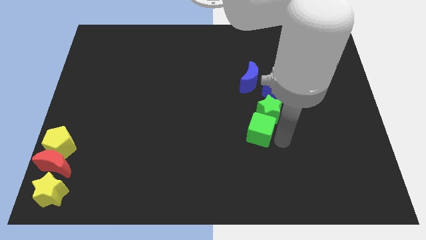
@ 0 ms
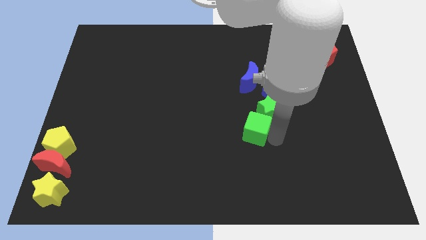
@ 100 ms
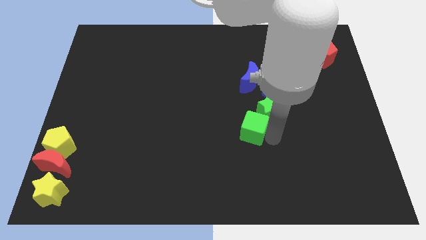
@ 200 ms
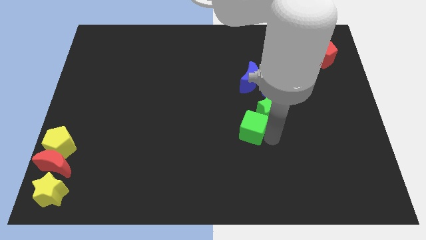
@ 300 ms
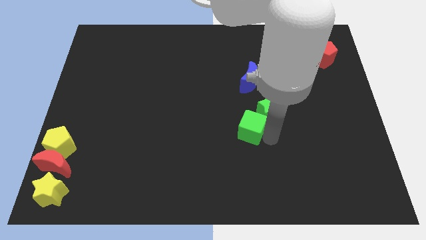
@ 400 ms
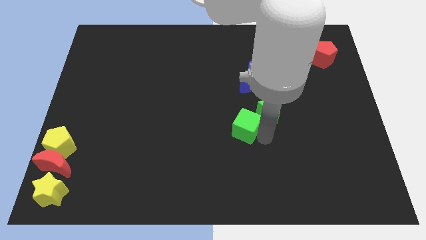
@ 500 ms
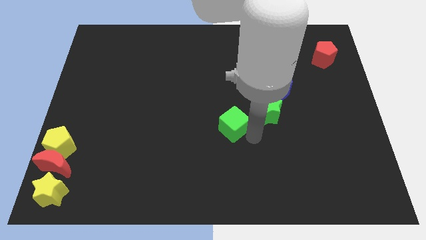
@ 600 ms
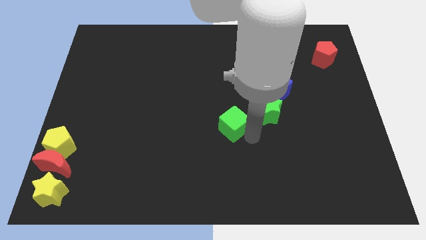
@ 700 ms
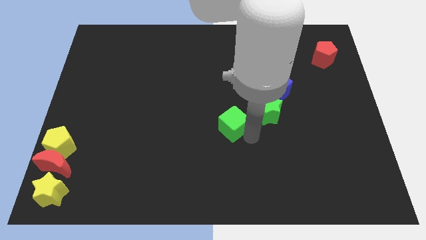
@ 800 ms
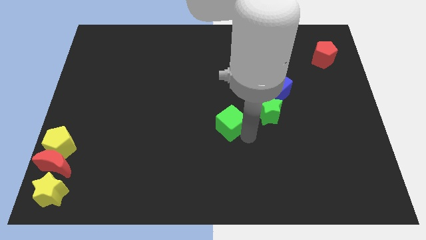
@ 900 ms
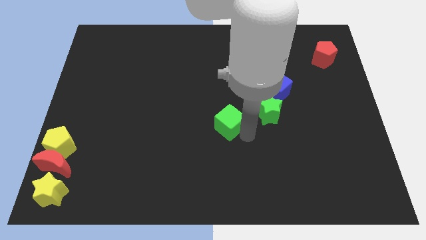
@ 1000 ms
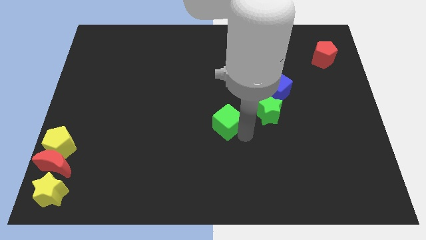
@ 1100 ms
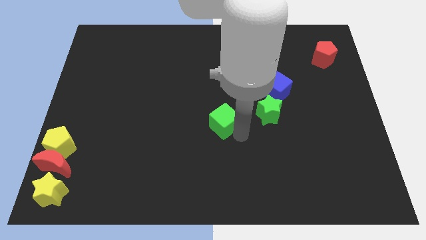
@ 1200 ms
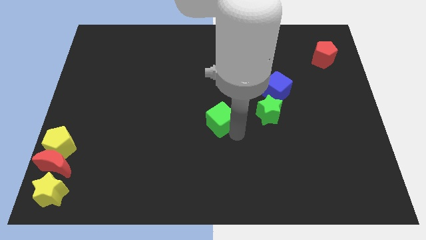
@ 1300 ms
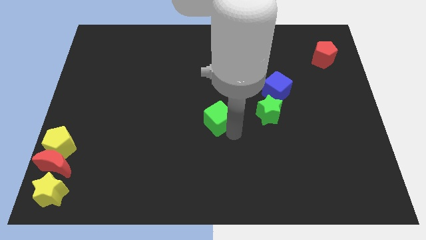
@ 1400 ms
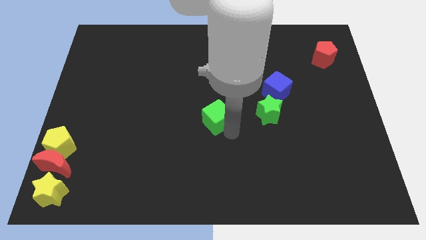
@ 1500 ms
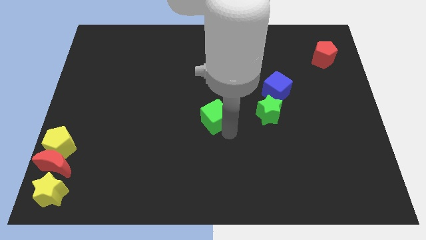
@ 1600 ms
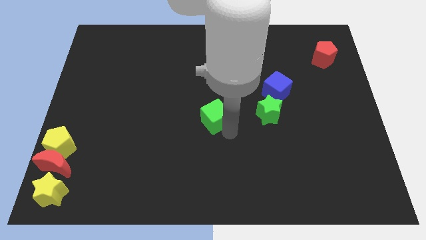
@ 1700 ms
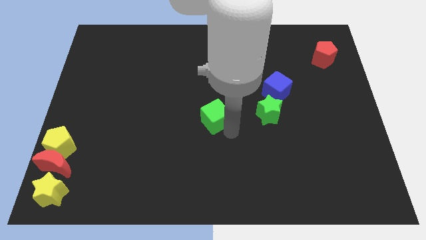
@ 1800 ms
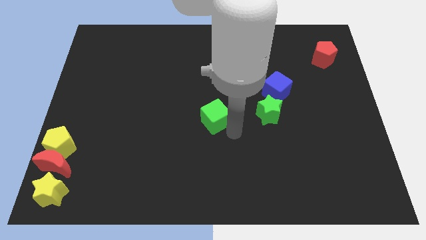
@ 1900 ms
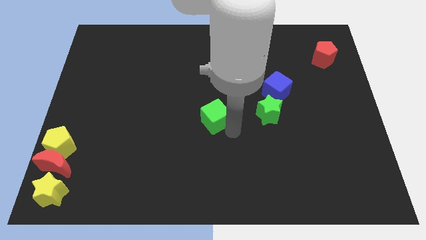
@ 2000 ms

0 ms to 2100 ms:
push green cube beside green star

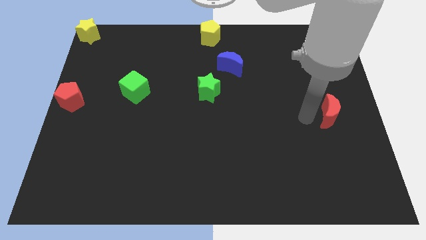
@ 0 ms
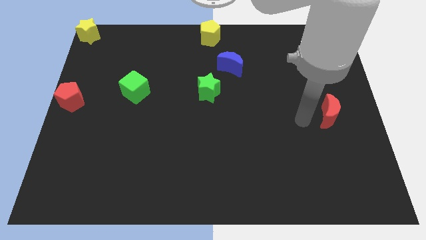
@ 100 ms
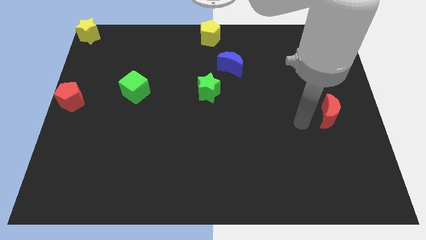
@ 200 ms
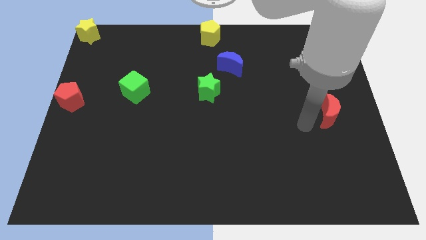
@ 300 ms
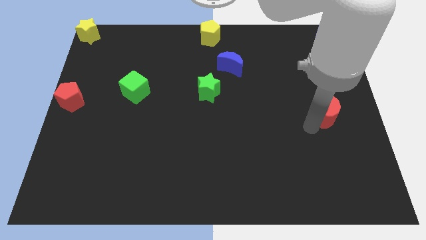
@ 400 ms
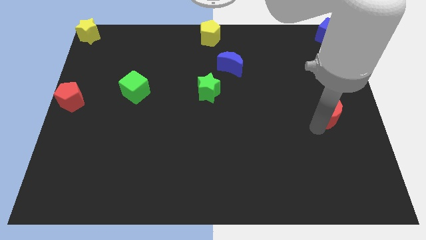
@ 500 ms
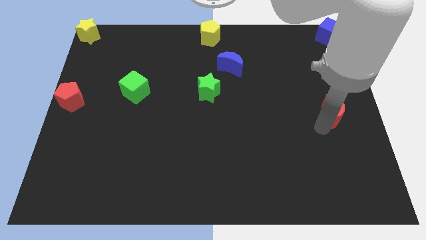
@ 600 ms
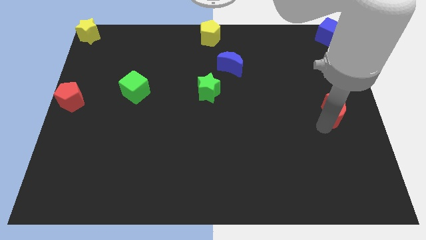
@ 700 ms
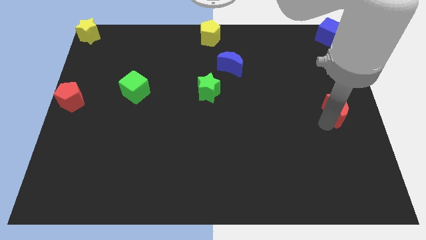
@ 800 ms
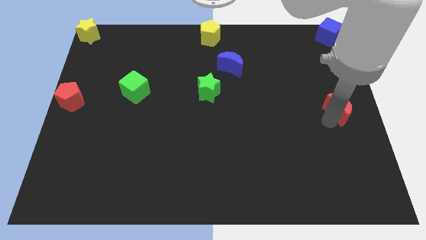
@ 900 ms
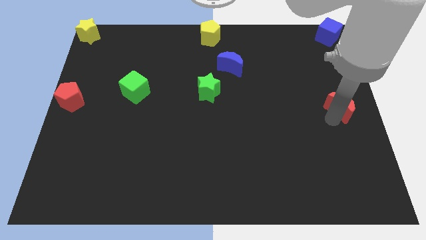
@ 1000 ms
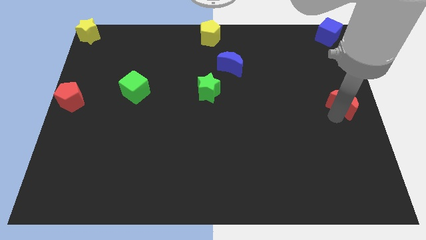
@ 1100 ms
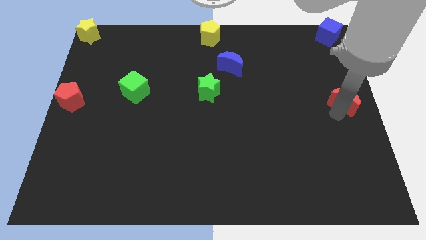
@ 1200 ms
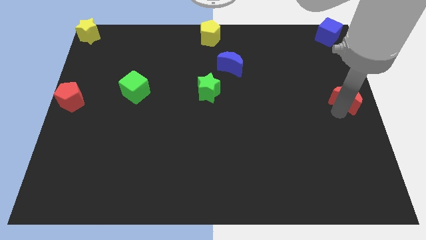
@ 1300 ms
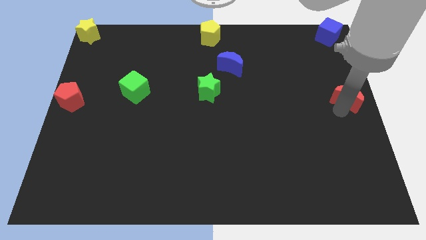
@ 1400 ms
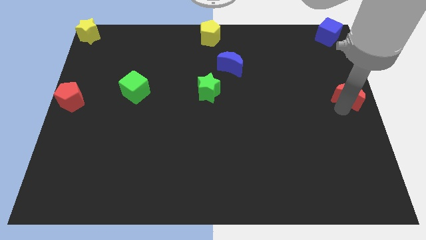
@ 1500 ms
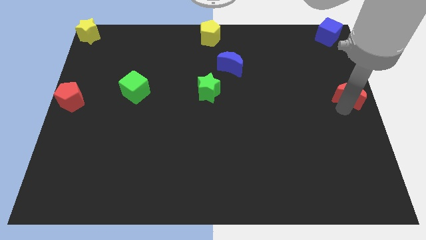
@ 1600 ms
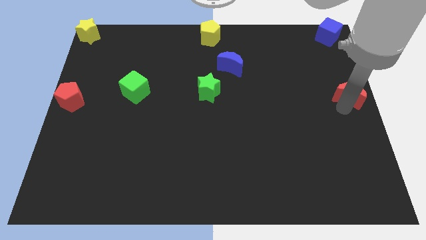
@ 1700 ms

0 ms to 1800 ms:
move the red crescent to the right center of the board

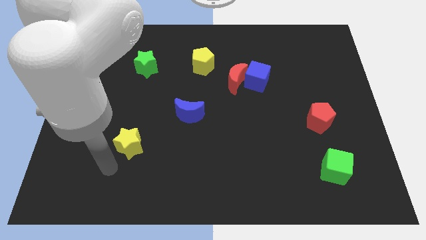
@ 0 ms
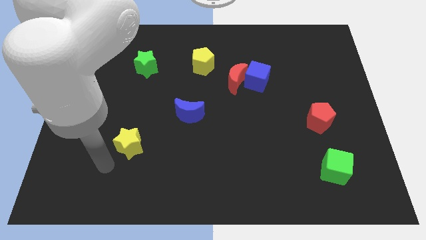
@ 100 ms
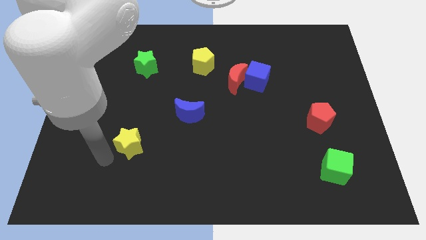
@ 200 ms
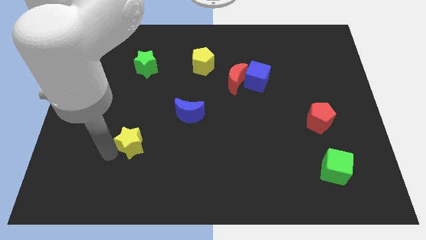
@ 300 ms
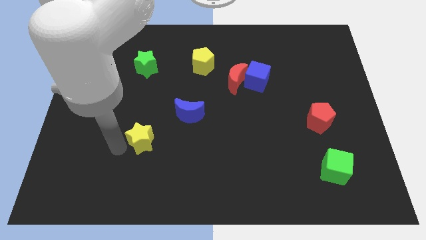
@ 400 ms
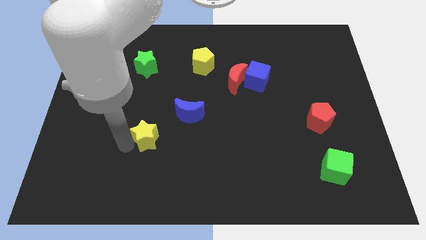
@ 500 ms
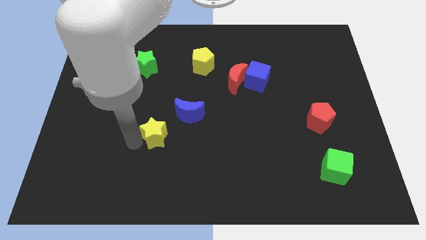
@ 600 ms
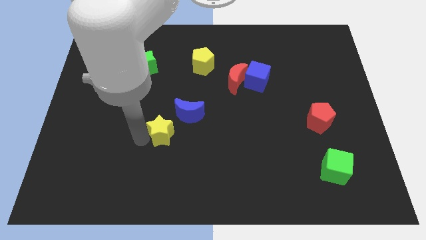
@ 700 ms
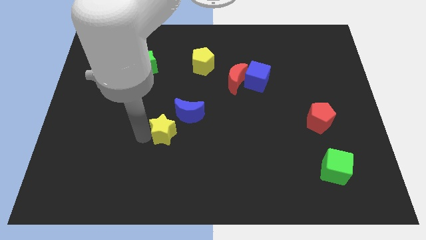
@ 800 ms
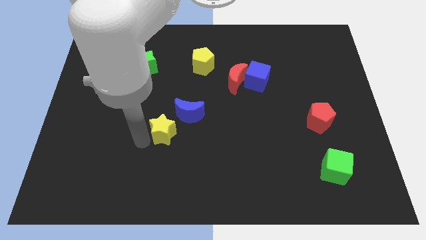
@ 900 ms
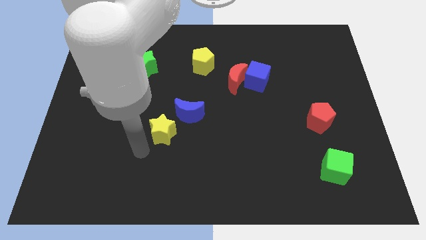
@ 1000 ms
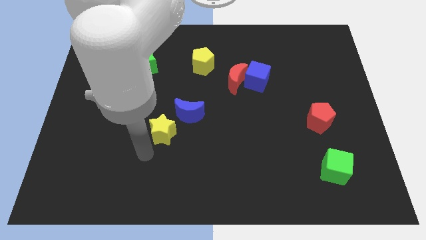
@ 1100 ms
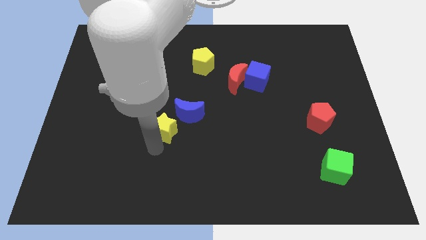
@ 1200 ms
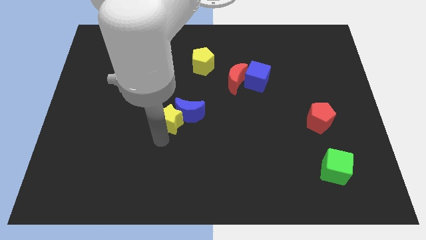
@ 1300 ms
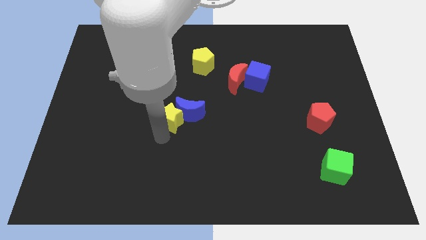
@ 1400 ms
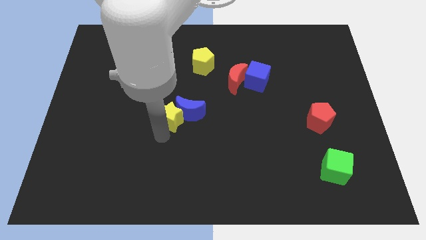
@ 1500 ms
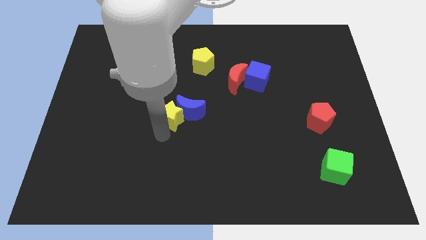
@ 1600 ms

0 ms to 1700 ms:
push the yellow star into the blue crescent

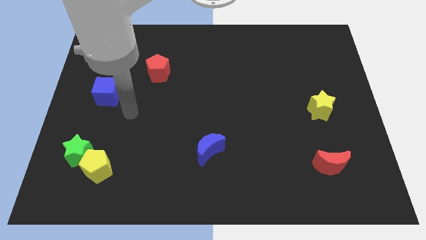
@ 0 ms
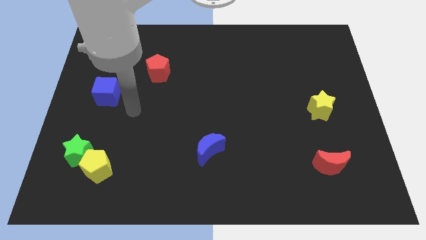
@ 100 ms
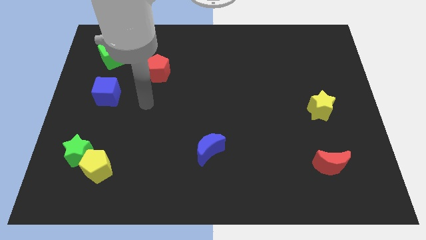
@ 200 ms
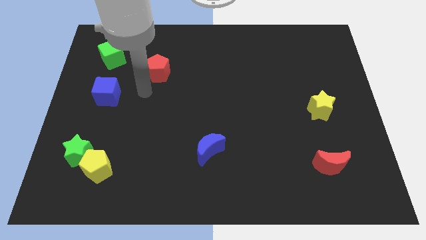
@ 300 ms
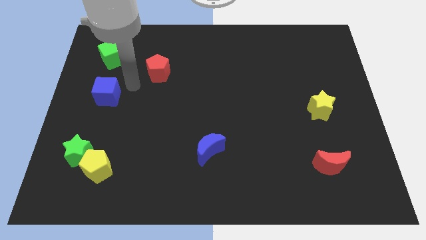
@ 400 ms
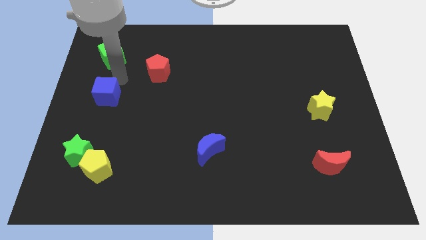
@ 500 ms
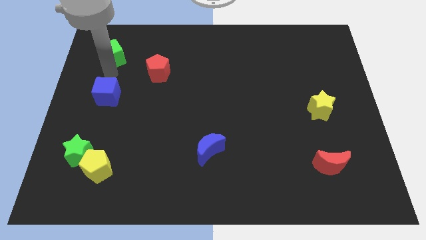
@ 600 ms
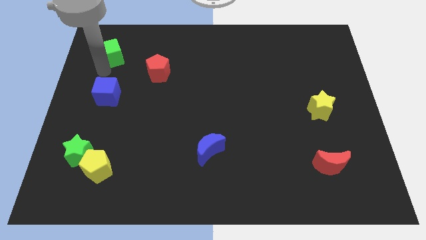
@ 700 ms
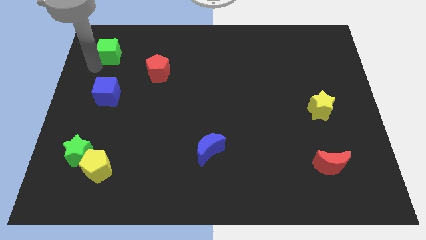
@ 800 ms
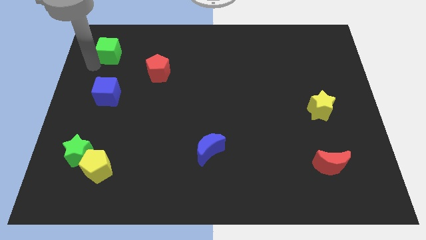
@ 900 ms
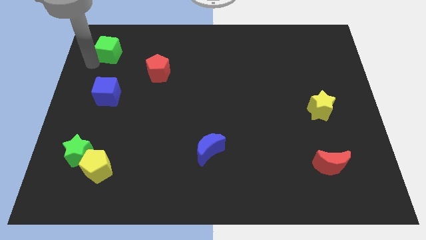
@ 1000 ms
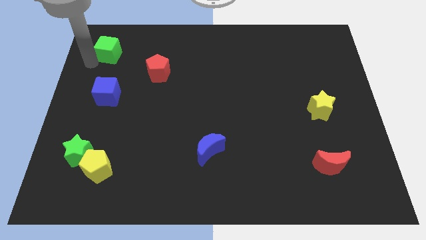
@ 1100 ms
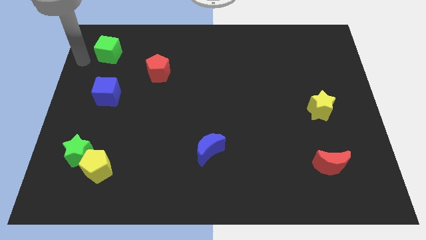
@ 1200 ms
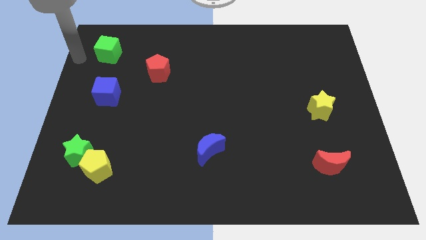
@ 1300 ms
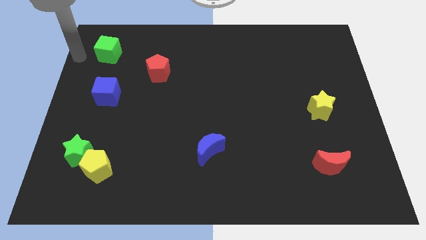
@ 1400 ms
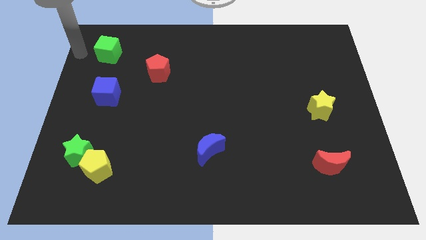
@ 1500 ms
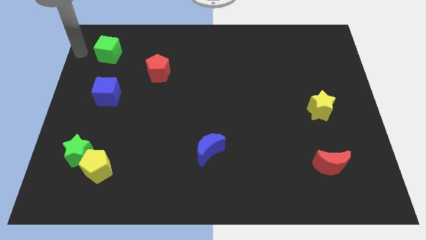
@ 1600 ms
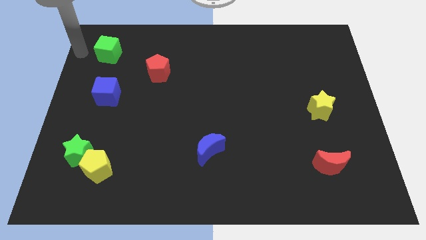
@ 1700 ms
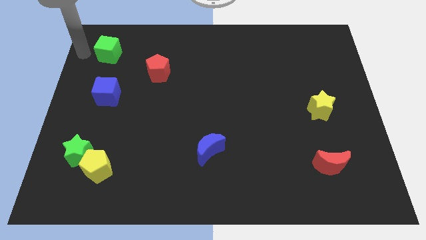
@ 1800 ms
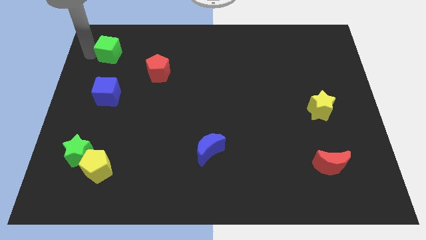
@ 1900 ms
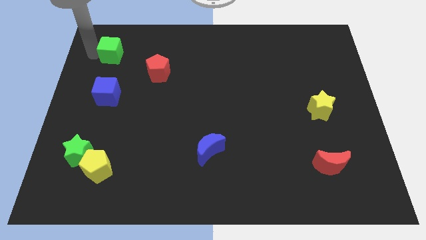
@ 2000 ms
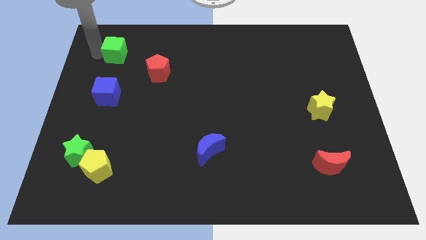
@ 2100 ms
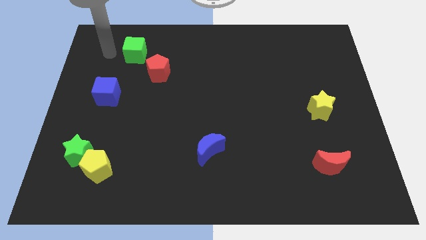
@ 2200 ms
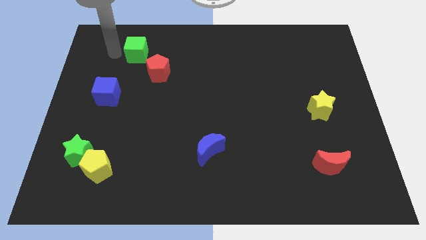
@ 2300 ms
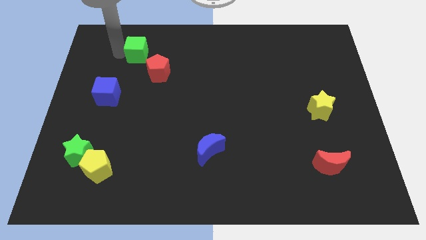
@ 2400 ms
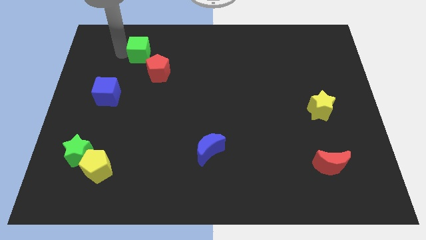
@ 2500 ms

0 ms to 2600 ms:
place green cube to the top left of red pentagon

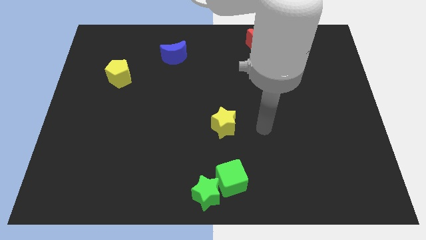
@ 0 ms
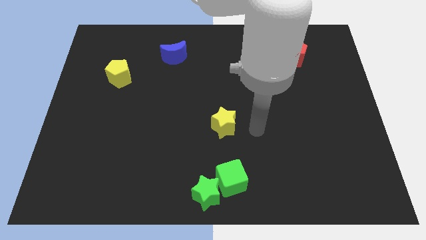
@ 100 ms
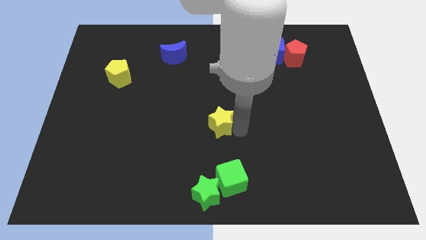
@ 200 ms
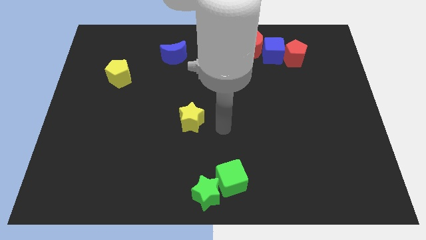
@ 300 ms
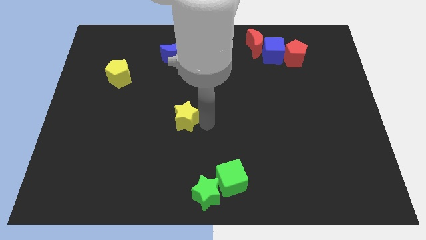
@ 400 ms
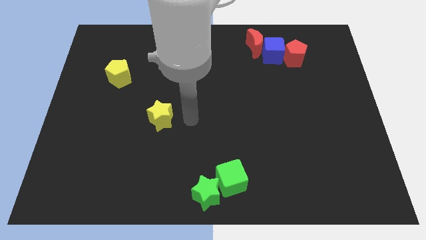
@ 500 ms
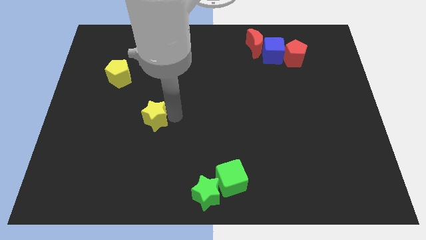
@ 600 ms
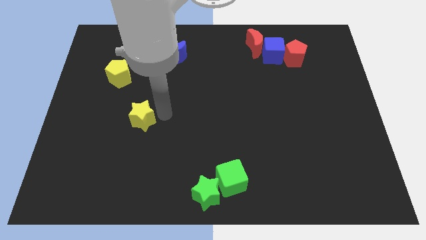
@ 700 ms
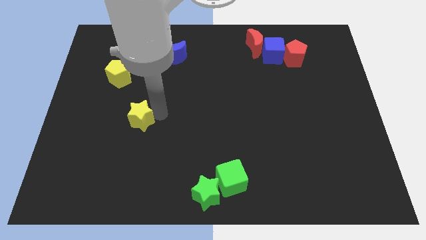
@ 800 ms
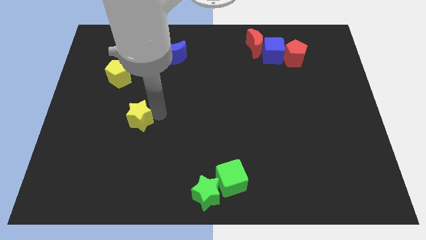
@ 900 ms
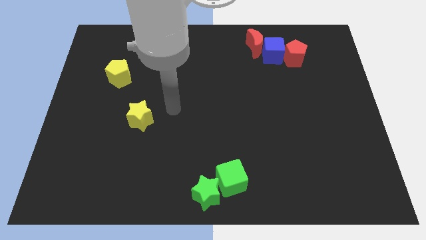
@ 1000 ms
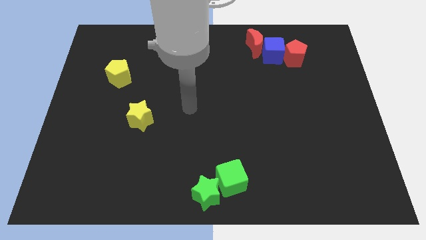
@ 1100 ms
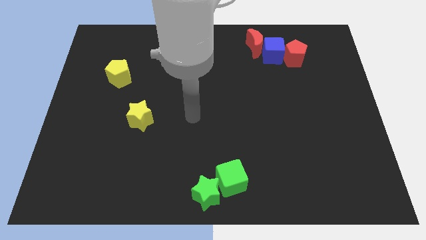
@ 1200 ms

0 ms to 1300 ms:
move the yellow star to the bottom right side of the yellow pentagon
